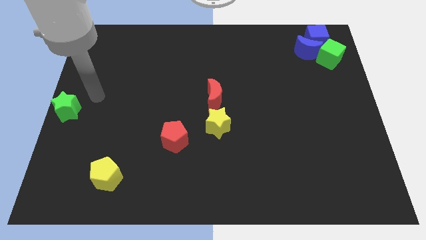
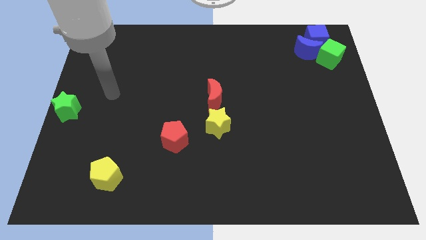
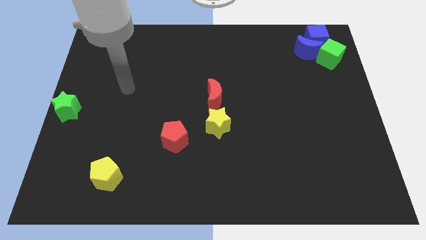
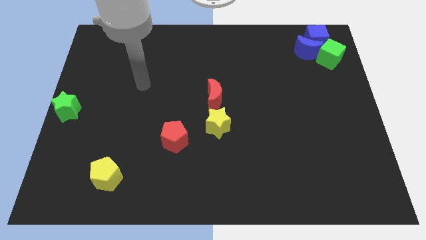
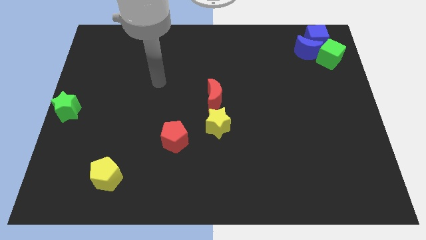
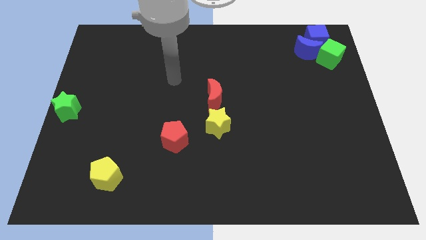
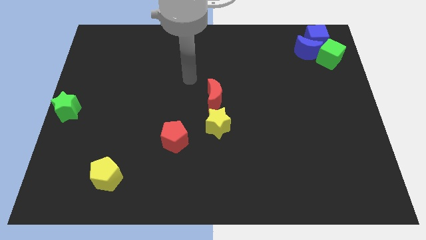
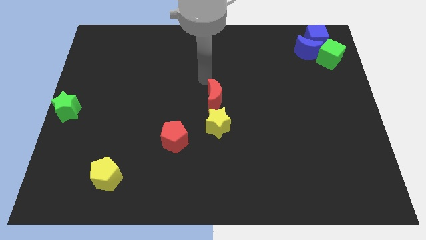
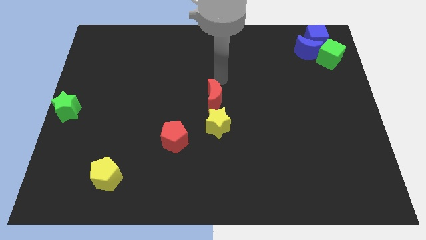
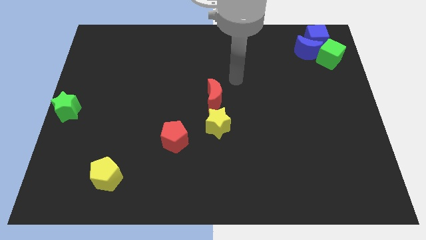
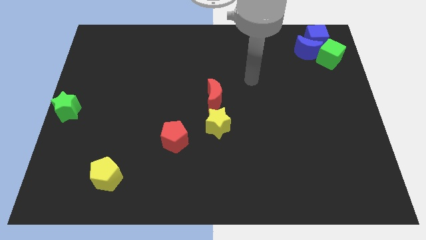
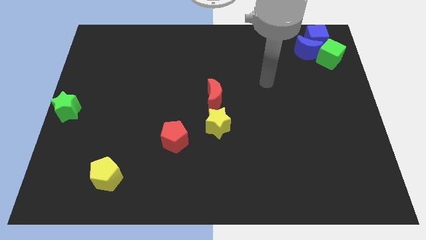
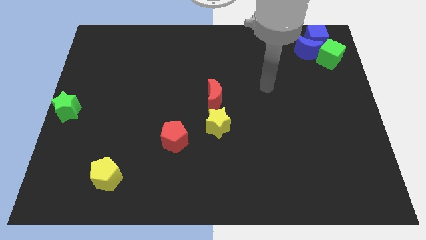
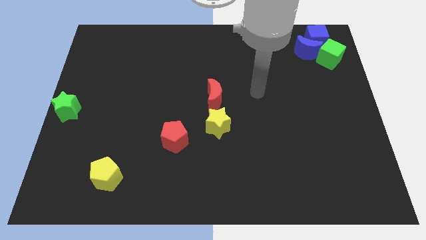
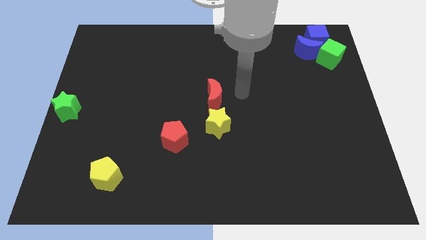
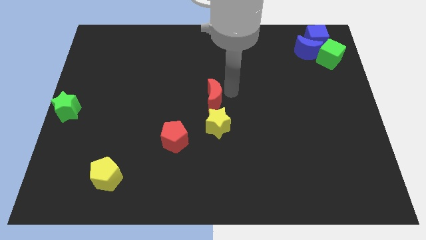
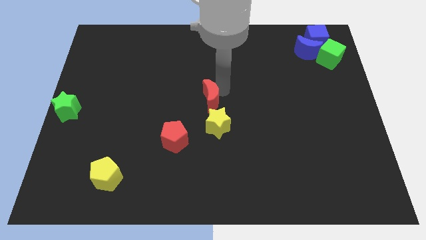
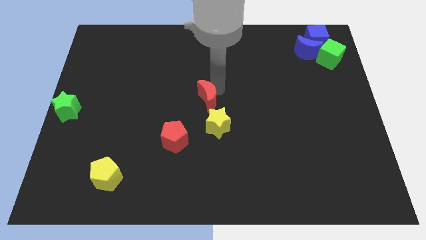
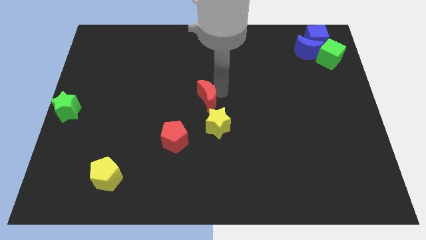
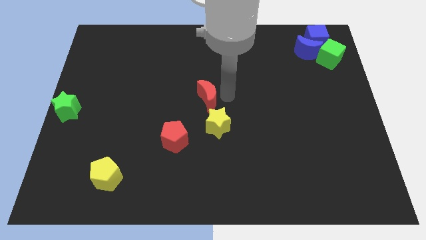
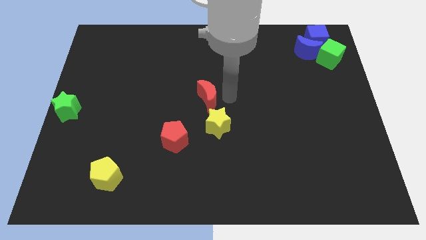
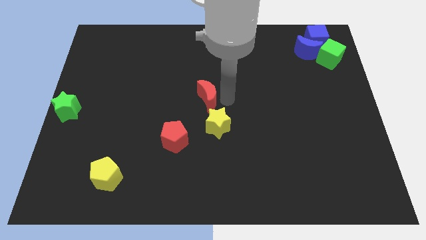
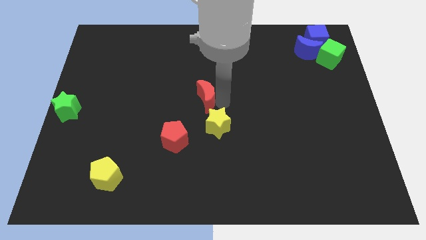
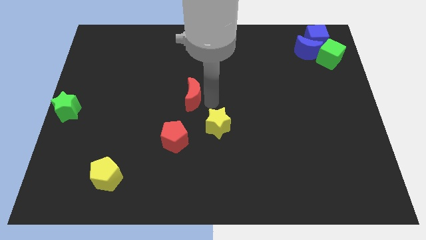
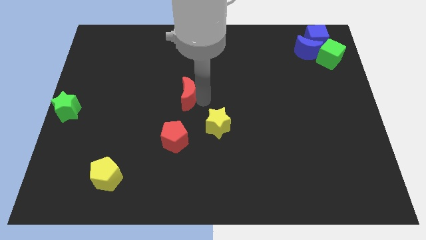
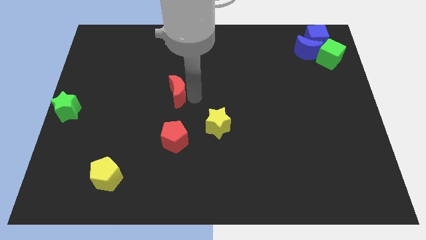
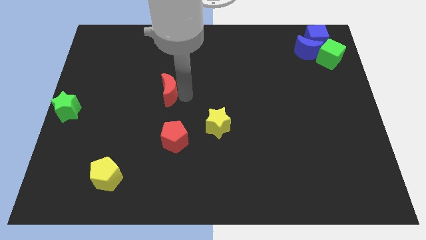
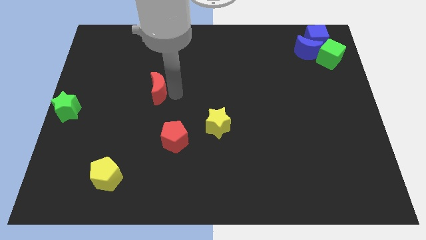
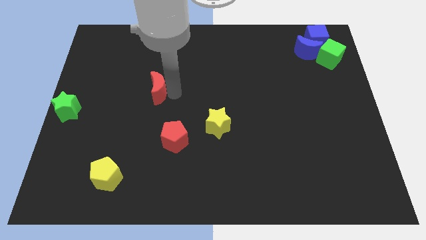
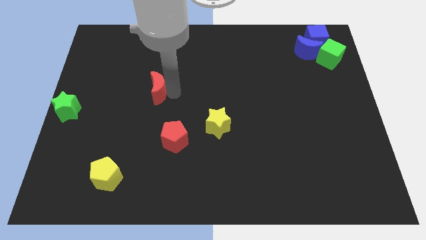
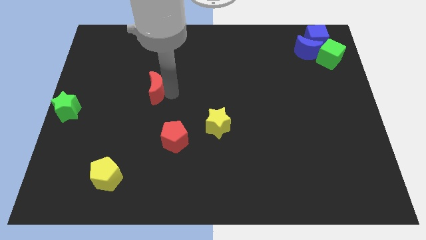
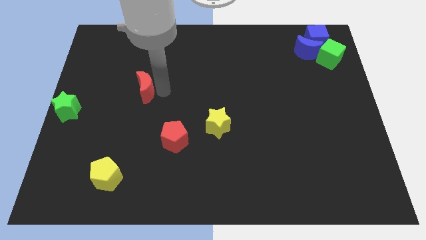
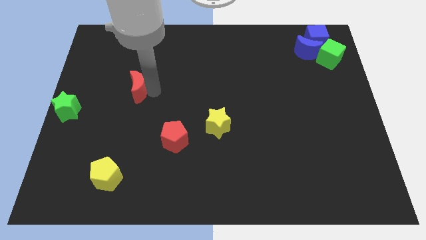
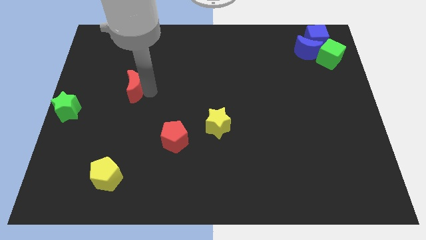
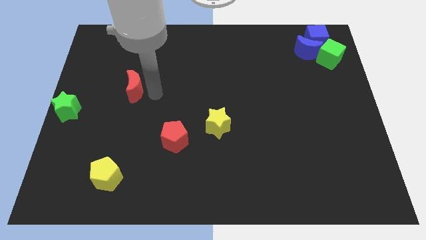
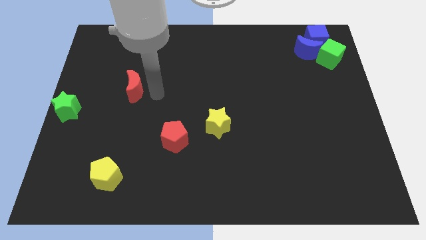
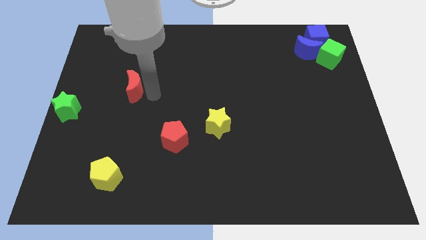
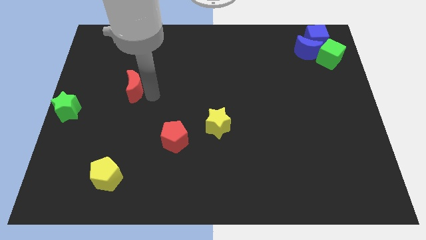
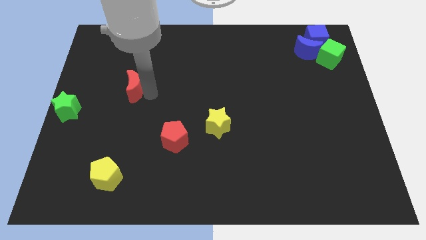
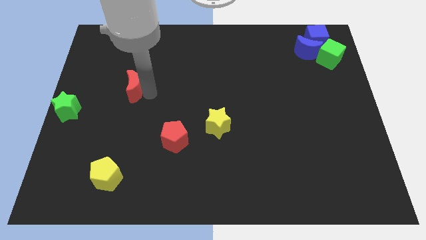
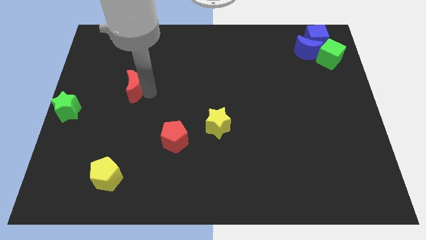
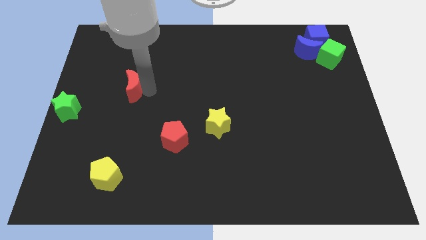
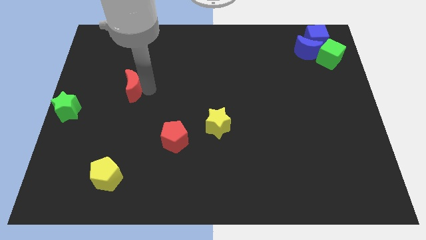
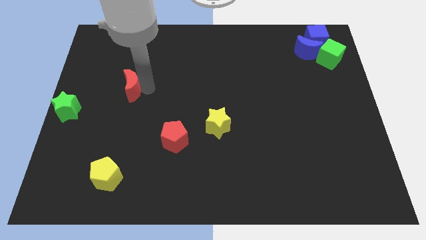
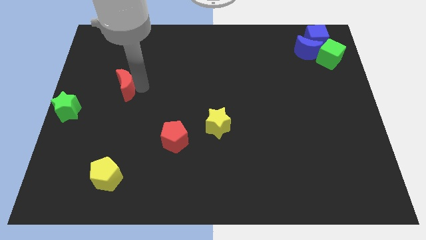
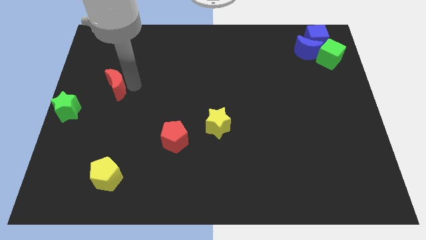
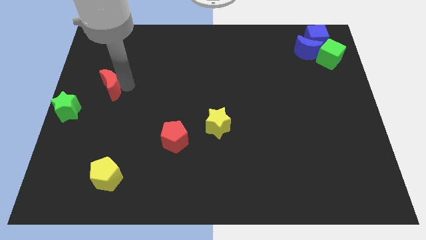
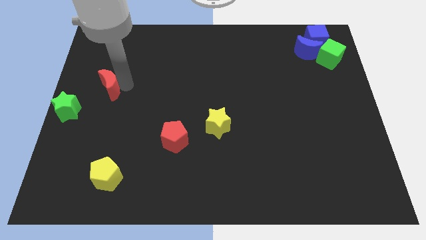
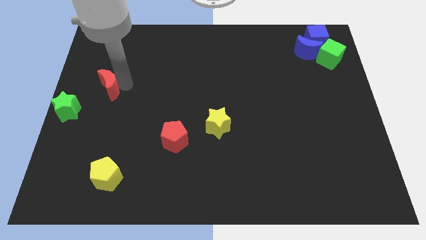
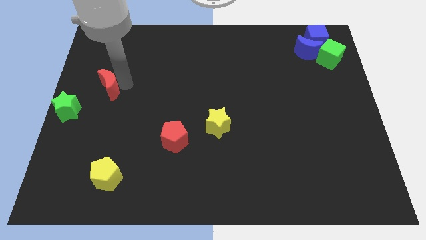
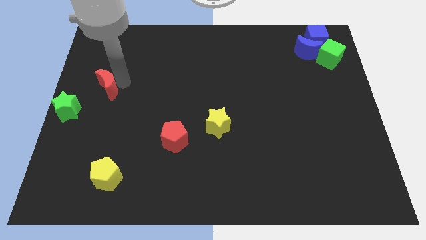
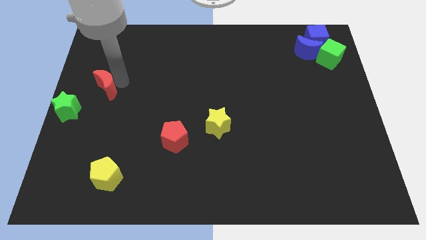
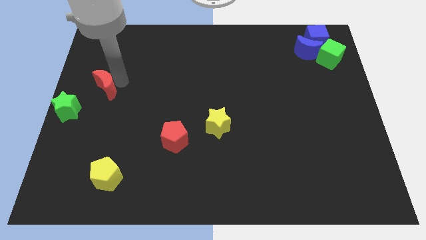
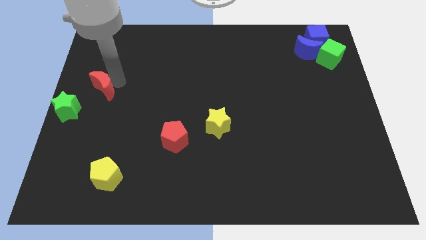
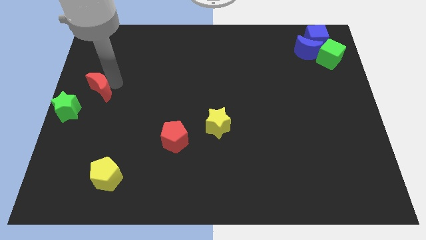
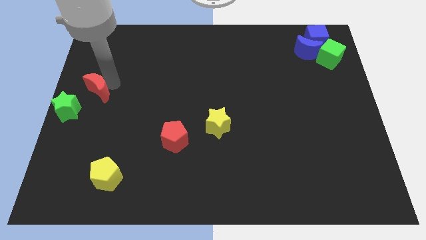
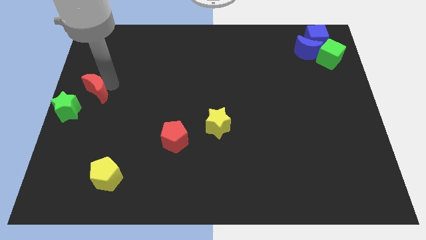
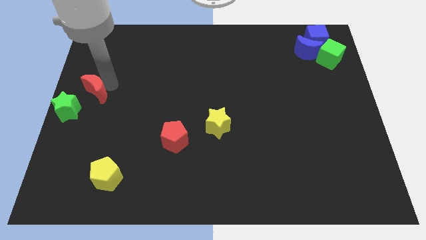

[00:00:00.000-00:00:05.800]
place the red crescent to the top right of the green star

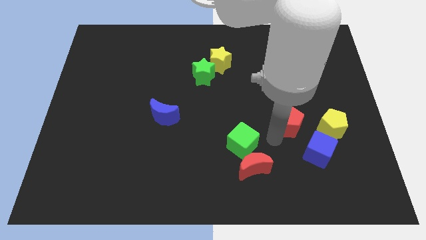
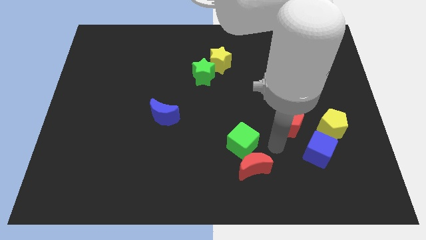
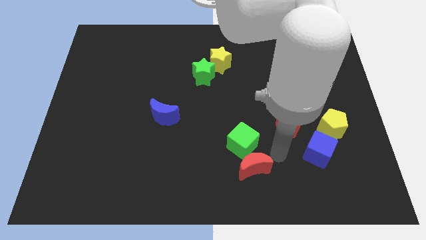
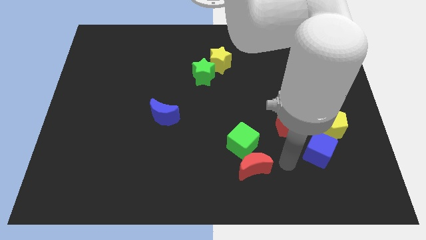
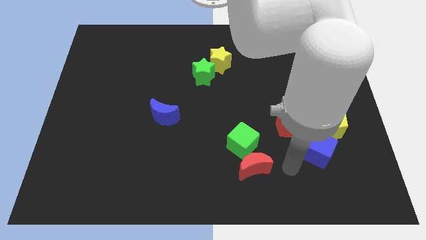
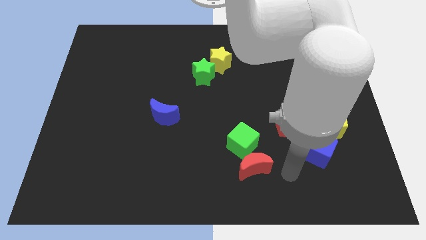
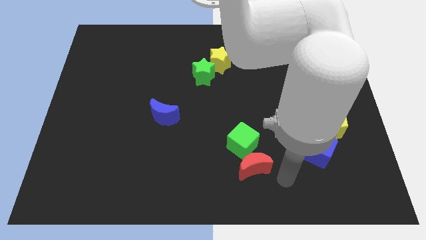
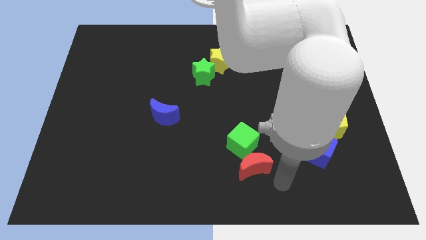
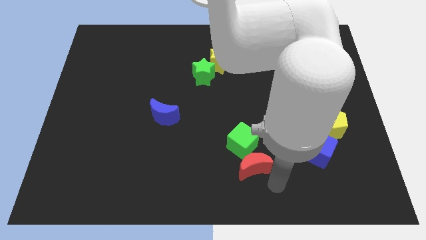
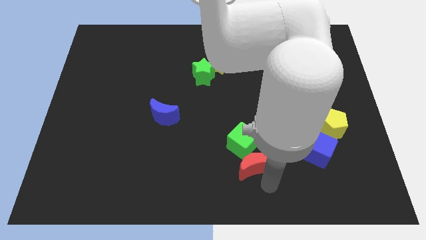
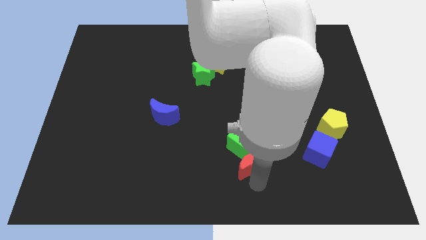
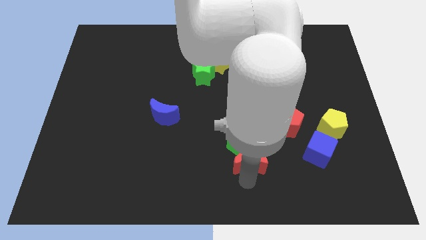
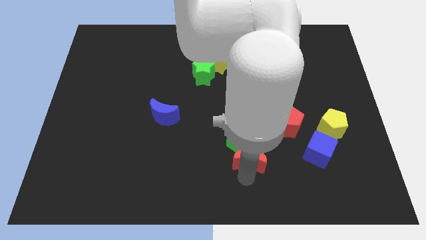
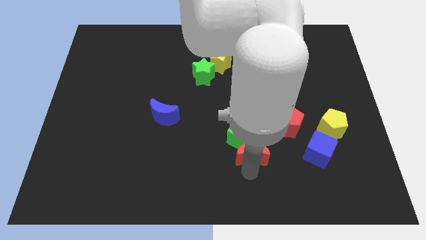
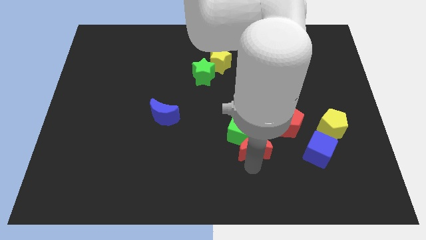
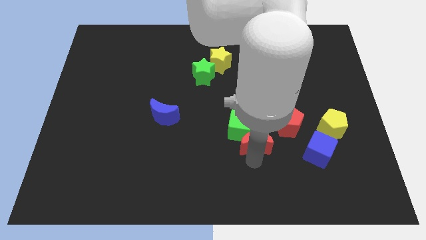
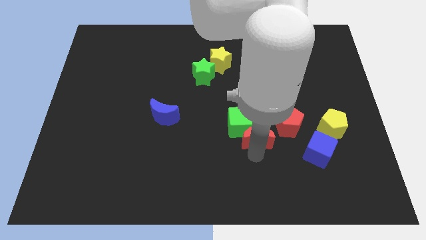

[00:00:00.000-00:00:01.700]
push the red crescent along with green cube towards top

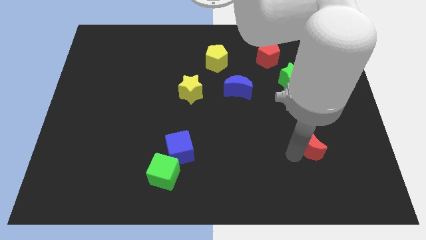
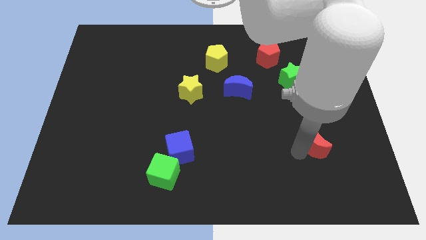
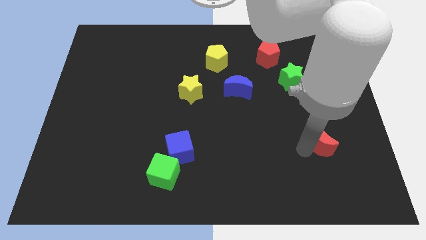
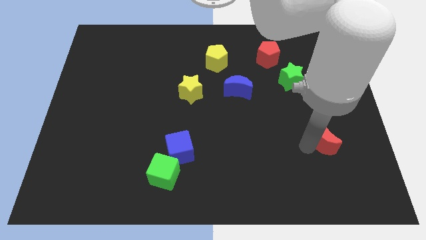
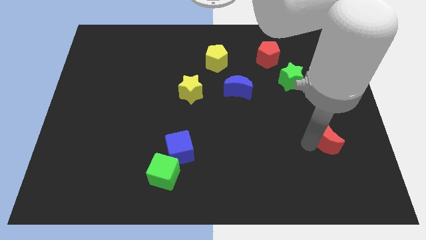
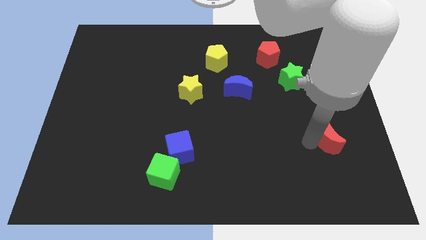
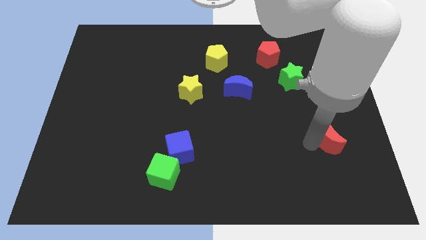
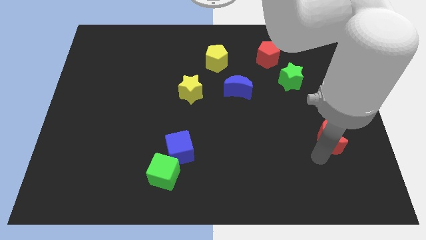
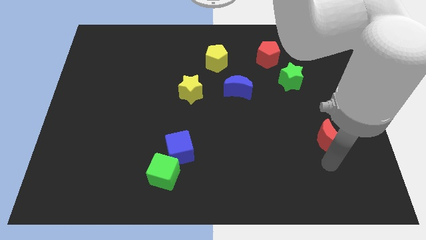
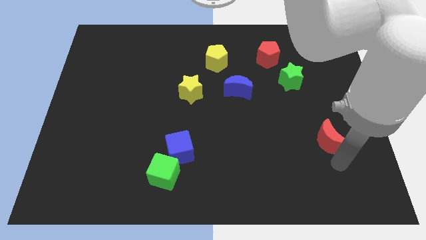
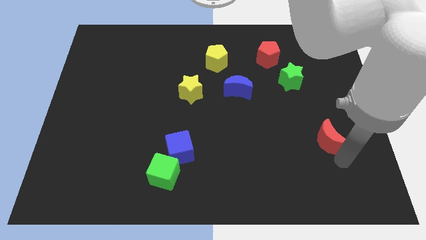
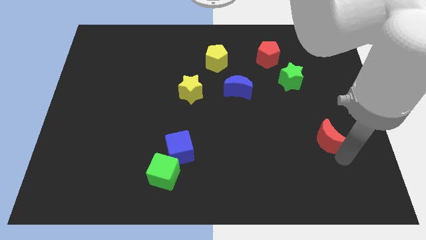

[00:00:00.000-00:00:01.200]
push the red moon towards the right

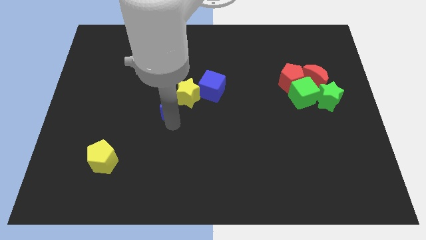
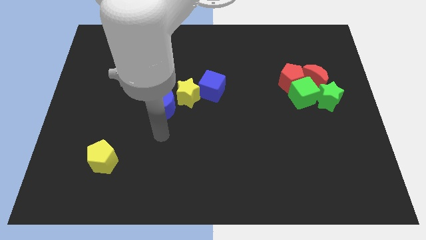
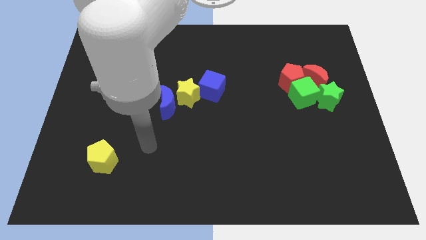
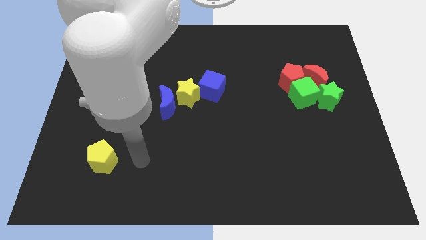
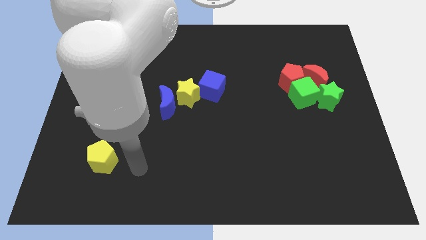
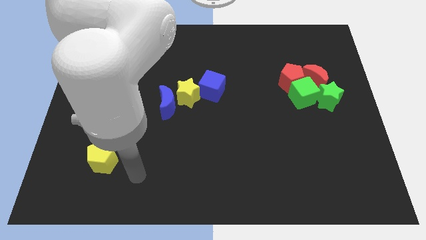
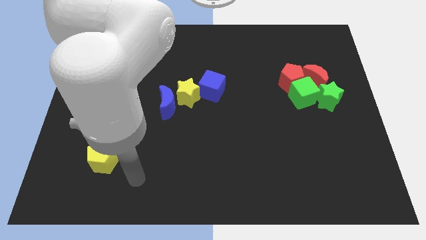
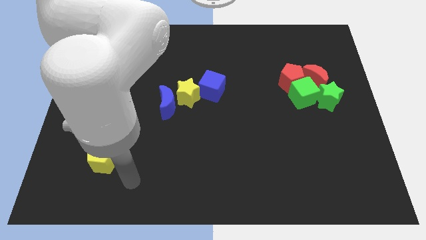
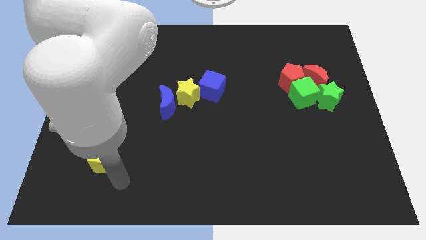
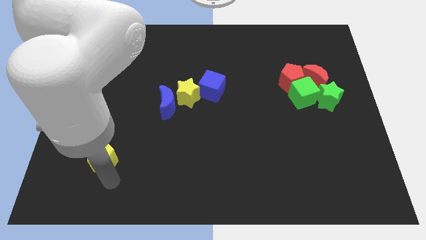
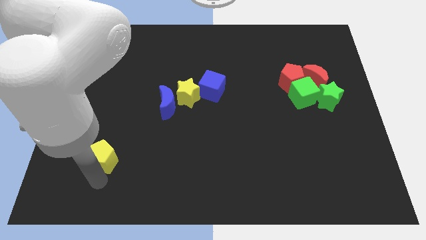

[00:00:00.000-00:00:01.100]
place your arm at the bottom of yellow pentagon
